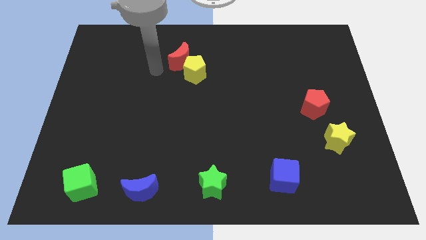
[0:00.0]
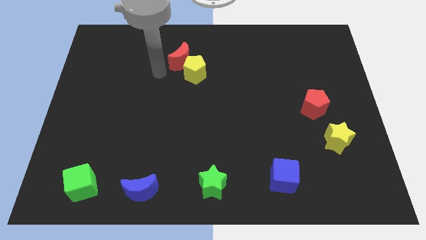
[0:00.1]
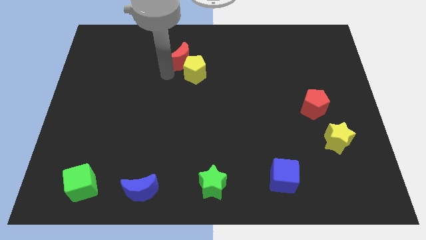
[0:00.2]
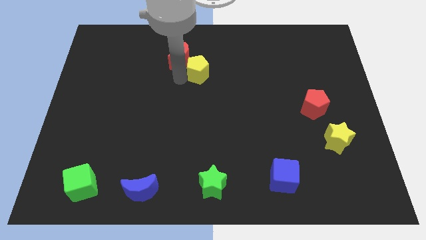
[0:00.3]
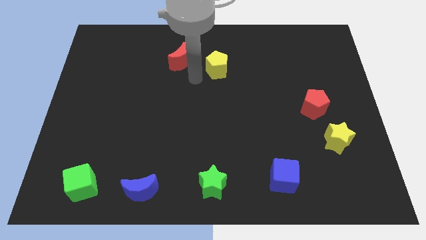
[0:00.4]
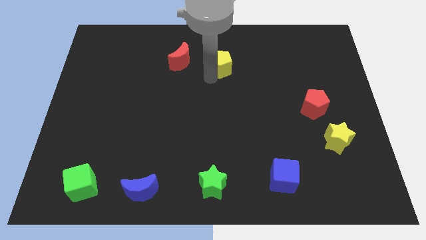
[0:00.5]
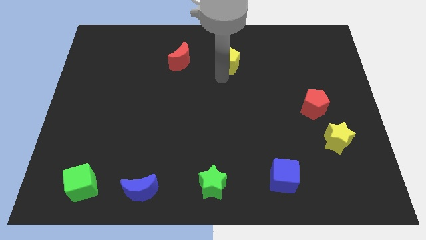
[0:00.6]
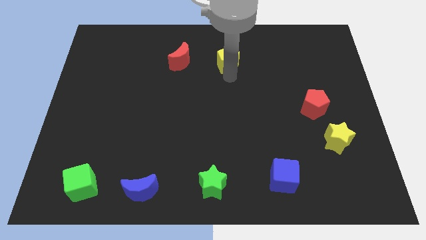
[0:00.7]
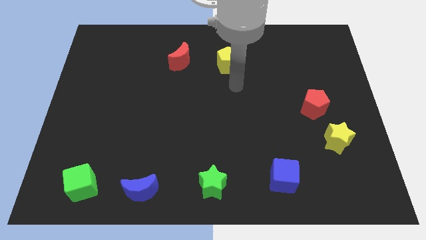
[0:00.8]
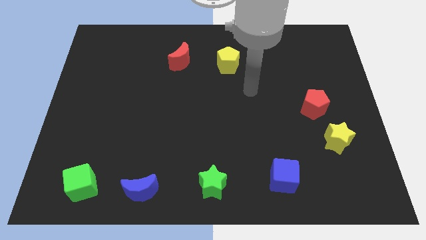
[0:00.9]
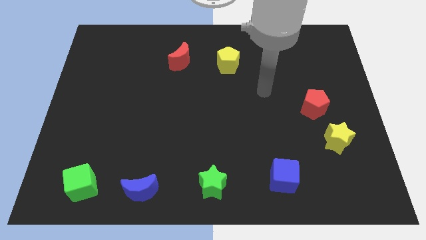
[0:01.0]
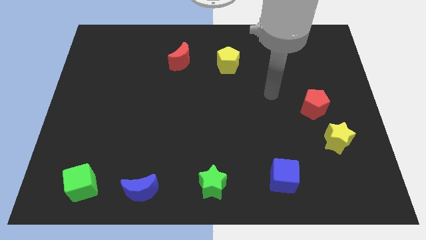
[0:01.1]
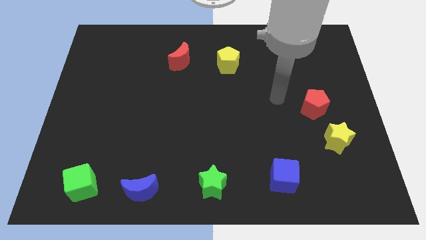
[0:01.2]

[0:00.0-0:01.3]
separate the yellow pentagon and the red crescent

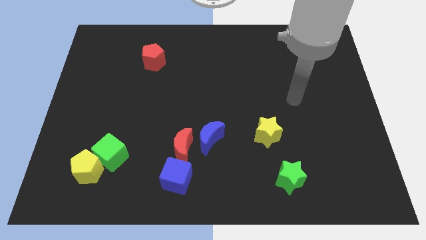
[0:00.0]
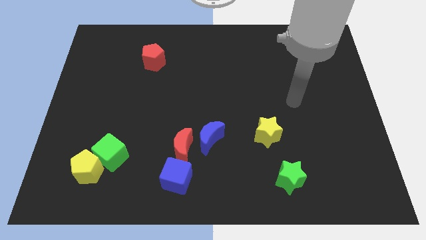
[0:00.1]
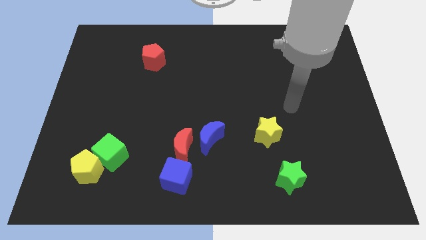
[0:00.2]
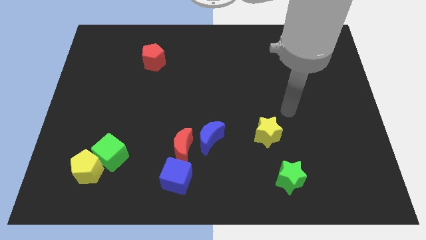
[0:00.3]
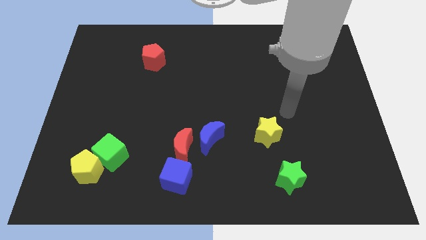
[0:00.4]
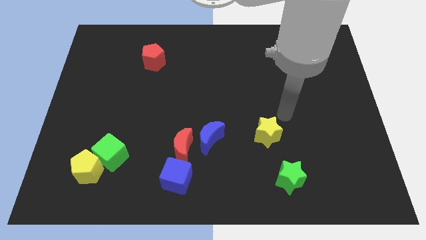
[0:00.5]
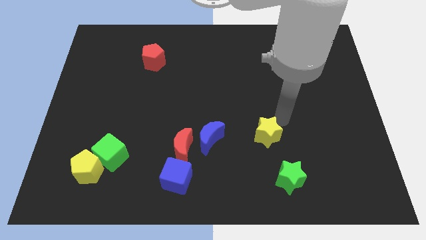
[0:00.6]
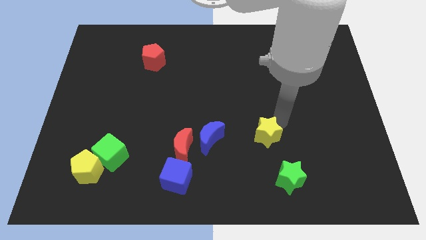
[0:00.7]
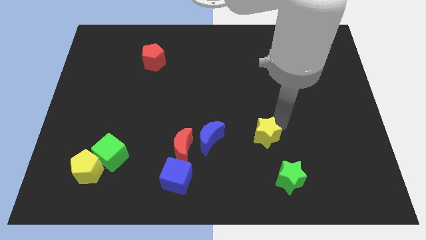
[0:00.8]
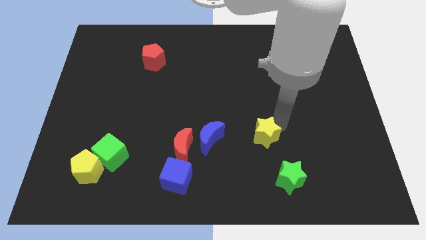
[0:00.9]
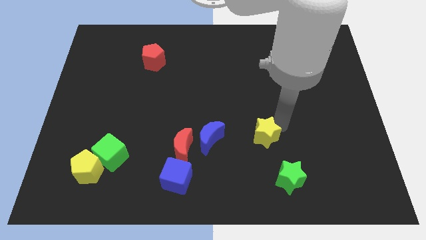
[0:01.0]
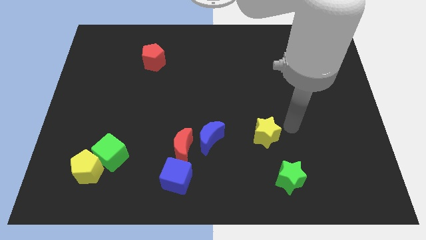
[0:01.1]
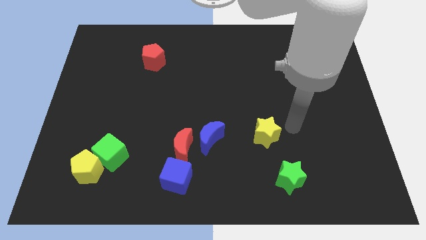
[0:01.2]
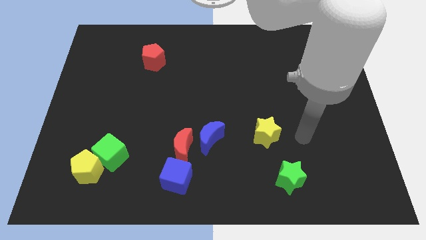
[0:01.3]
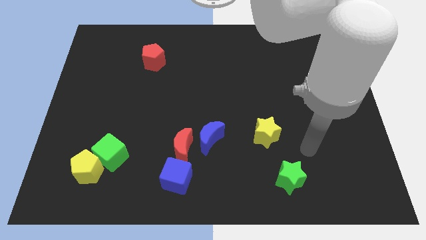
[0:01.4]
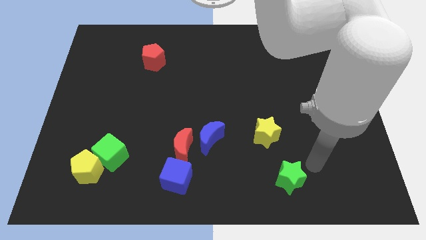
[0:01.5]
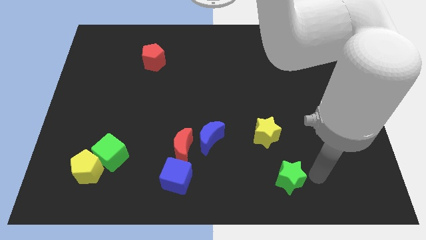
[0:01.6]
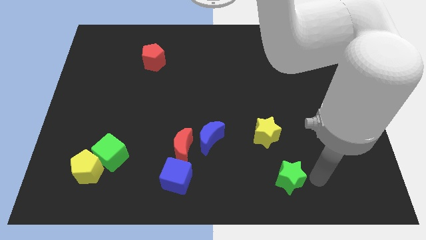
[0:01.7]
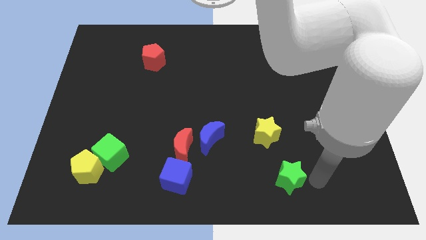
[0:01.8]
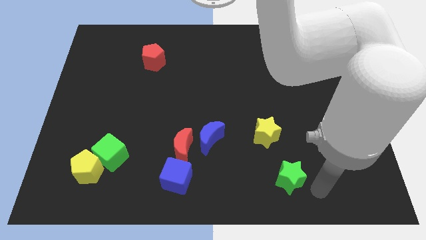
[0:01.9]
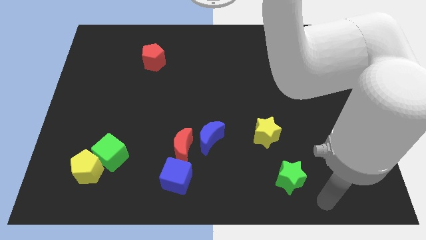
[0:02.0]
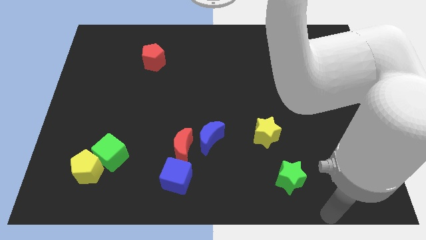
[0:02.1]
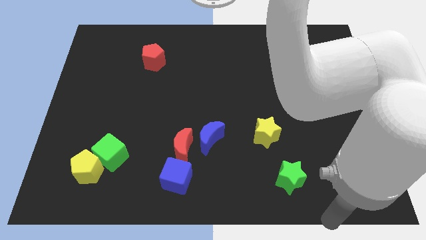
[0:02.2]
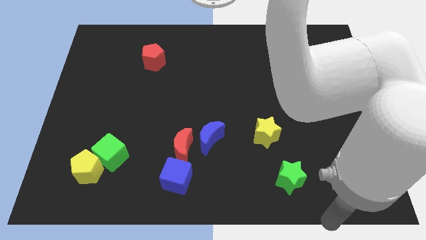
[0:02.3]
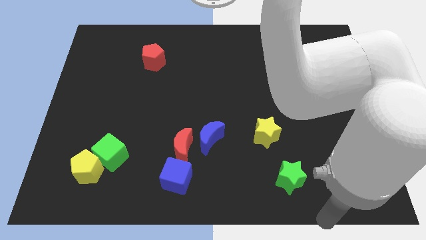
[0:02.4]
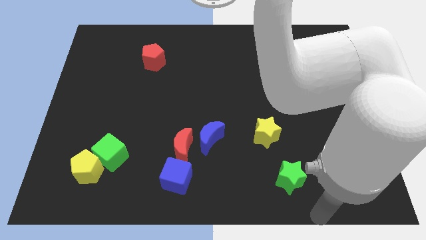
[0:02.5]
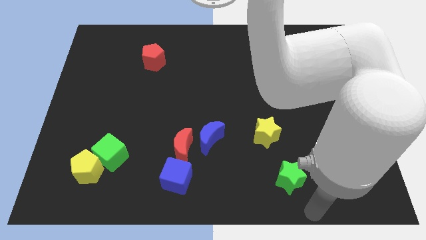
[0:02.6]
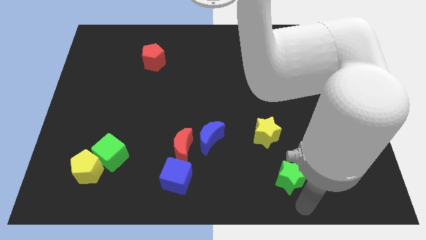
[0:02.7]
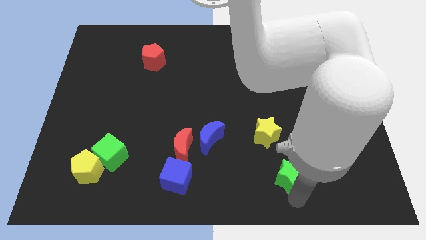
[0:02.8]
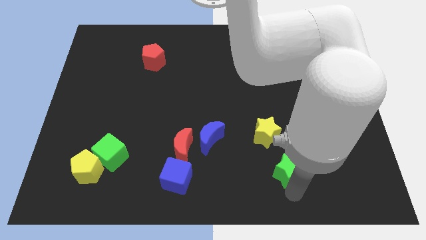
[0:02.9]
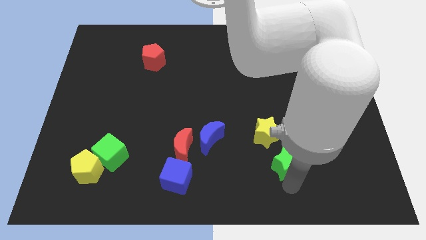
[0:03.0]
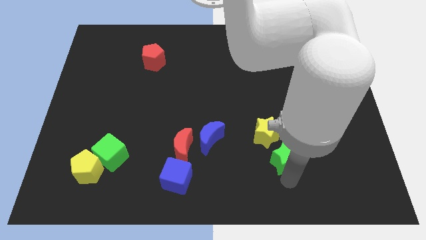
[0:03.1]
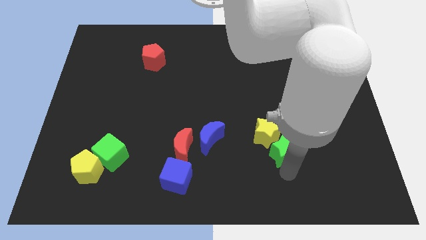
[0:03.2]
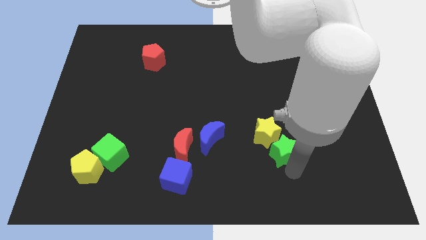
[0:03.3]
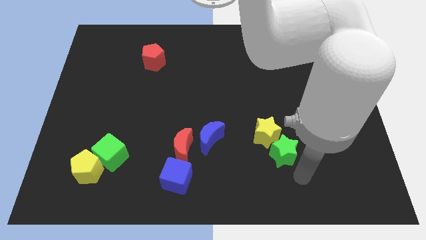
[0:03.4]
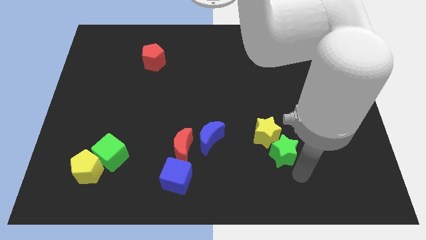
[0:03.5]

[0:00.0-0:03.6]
move the green star close to the bottom right side of the yellow star

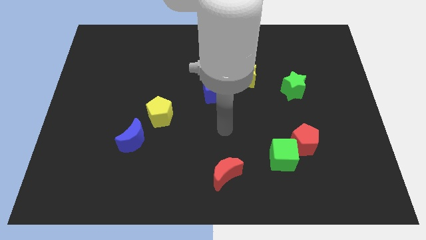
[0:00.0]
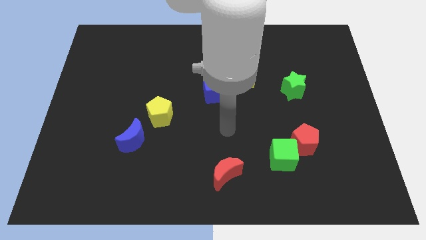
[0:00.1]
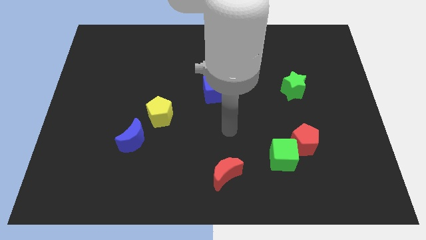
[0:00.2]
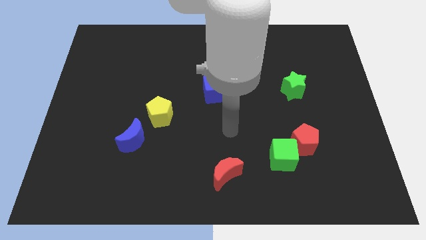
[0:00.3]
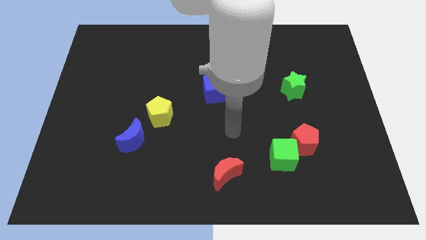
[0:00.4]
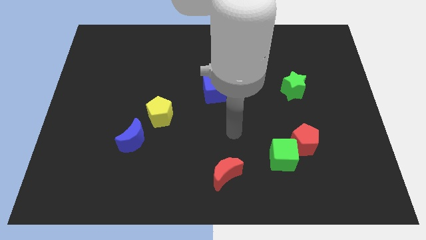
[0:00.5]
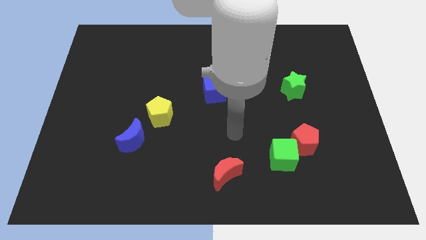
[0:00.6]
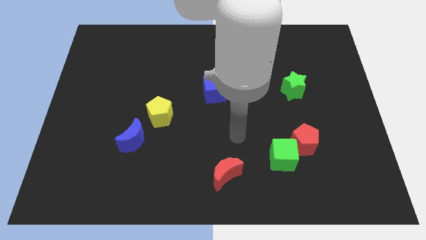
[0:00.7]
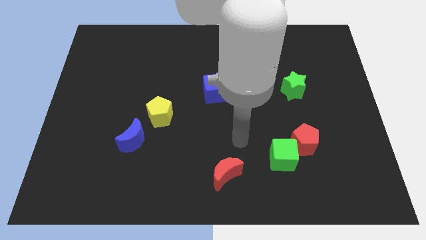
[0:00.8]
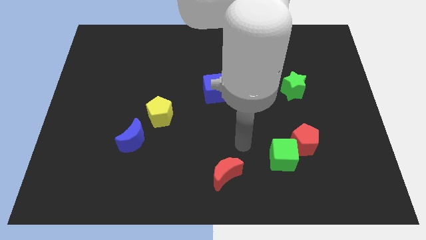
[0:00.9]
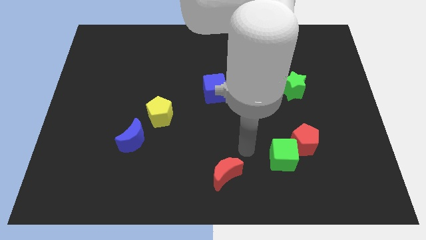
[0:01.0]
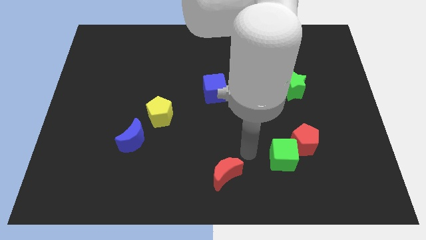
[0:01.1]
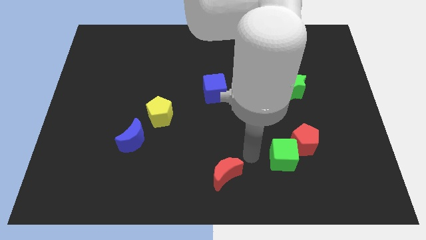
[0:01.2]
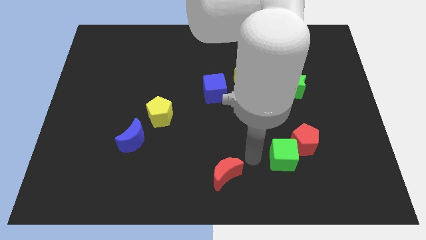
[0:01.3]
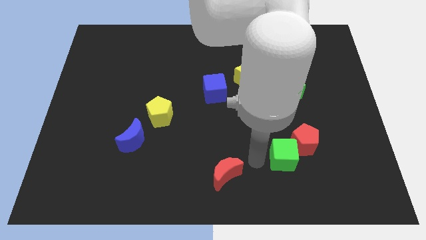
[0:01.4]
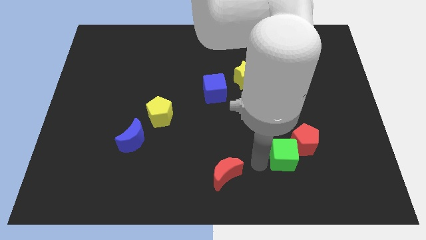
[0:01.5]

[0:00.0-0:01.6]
put arm in between red crescent and green cube

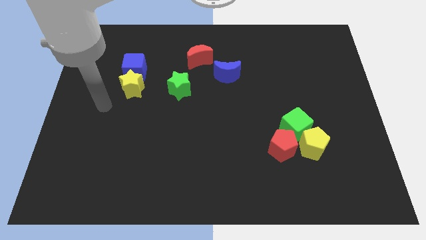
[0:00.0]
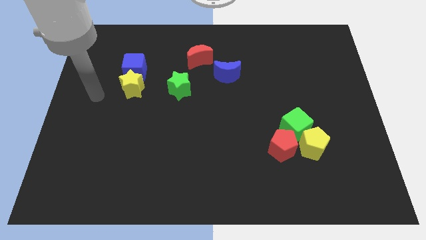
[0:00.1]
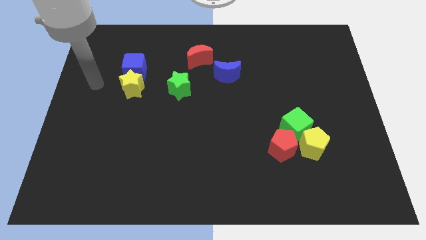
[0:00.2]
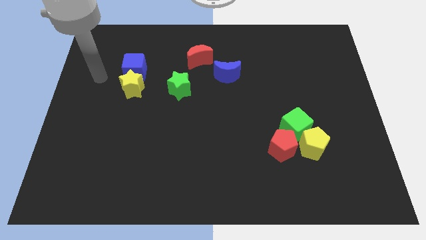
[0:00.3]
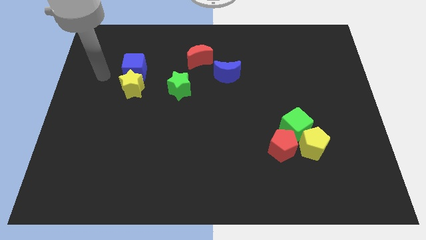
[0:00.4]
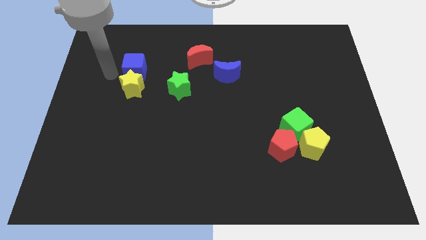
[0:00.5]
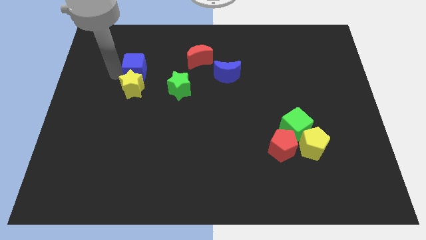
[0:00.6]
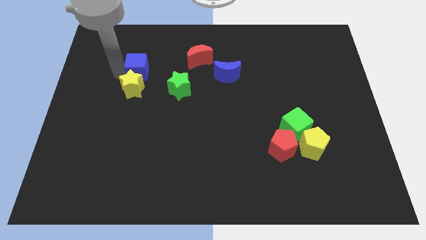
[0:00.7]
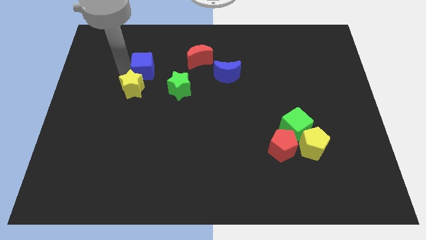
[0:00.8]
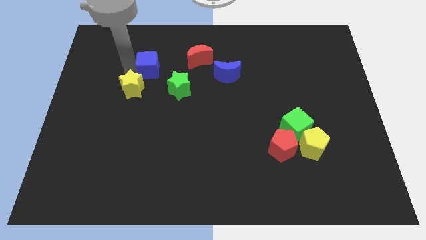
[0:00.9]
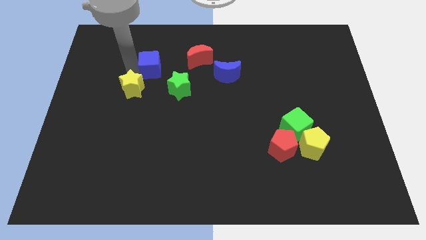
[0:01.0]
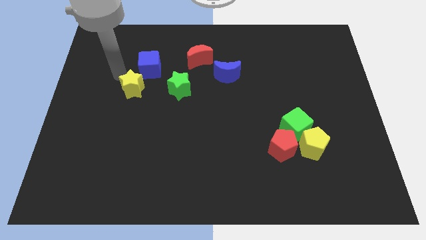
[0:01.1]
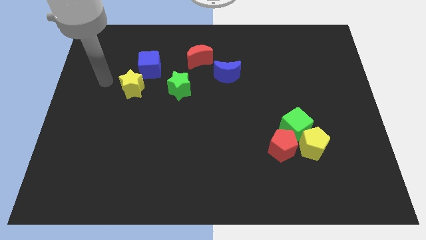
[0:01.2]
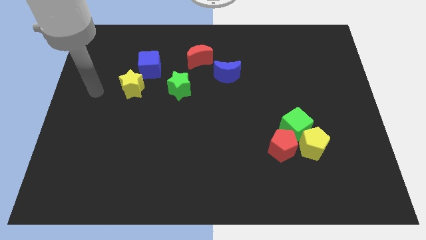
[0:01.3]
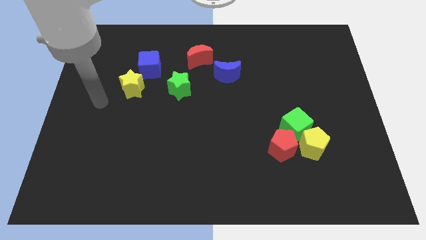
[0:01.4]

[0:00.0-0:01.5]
slightly move the blue cube towards the right

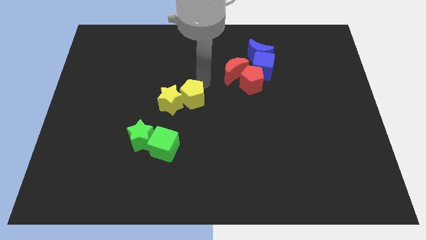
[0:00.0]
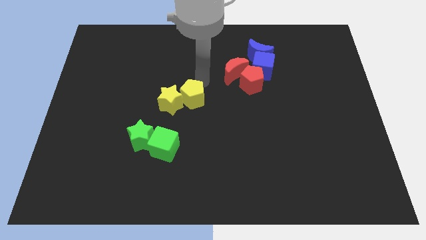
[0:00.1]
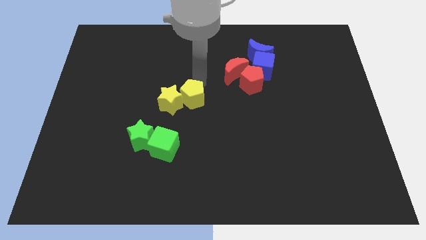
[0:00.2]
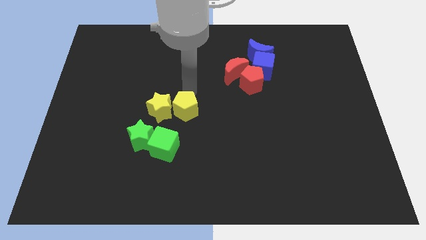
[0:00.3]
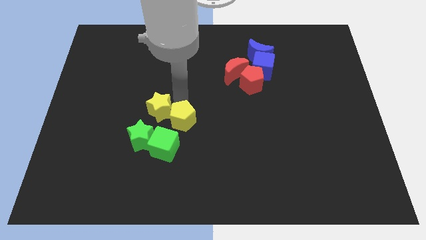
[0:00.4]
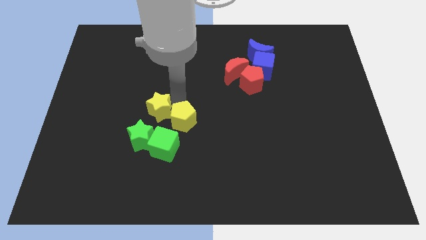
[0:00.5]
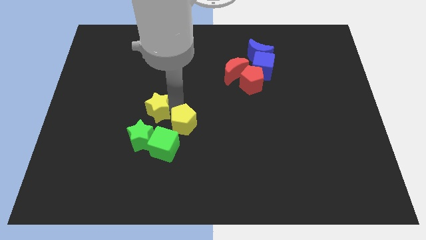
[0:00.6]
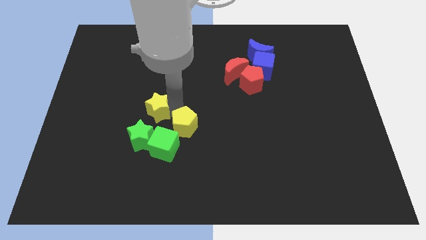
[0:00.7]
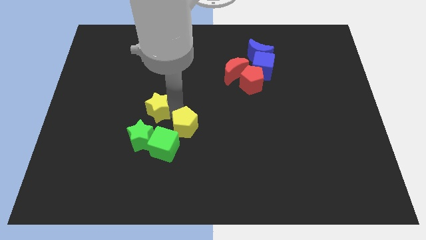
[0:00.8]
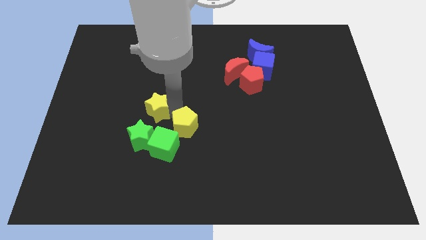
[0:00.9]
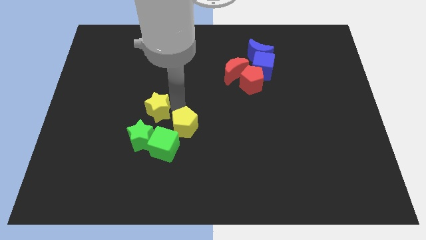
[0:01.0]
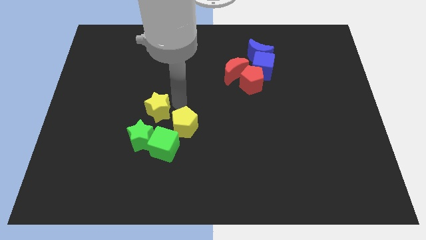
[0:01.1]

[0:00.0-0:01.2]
place the yellow blocks above the green blocks
